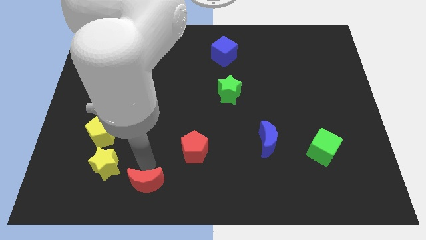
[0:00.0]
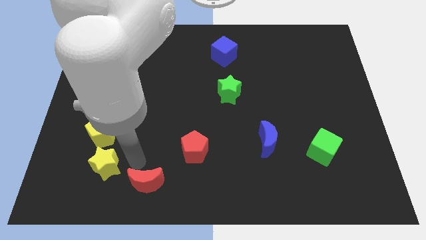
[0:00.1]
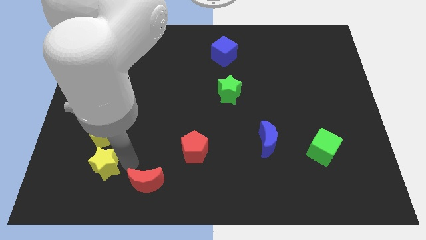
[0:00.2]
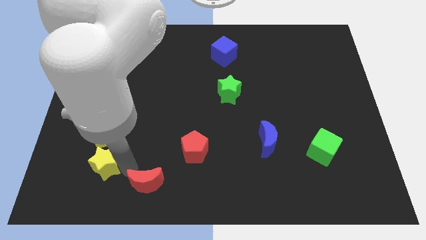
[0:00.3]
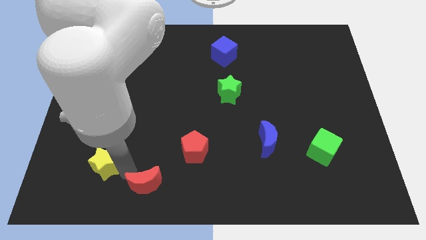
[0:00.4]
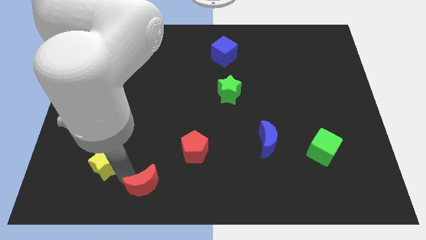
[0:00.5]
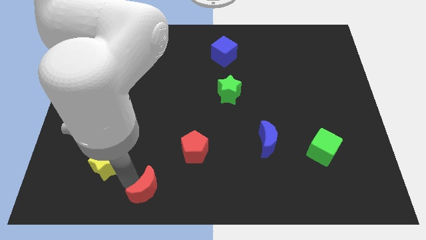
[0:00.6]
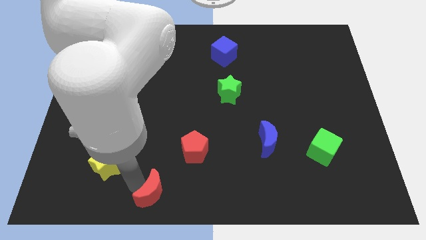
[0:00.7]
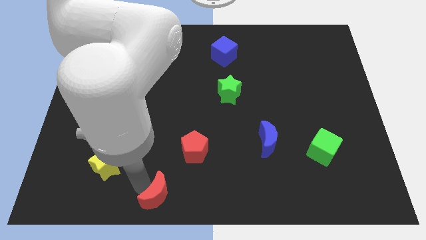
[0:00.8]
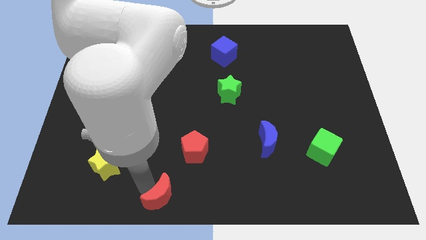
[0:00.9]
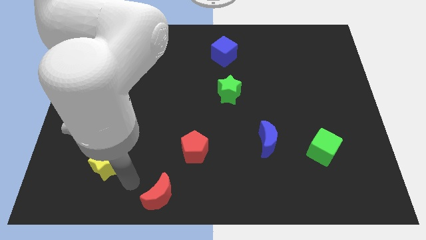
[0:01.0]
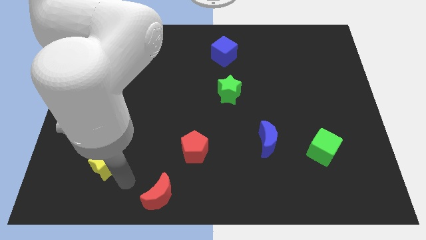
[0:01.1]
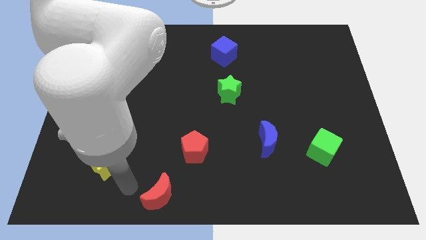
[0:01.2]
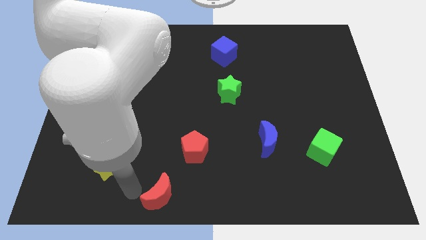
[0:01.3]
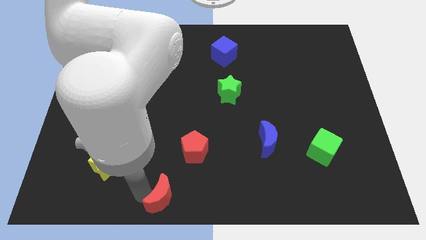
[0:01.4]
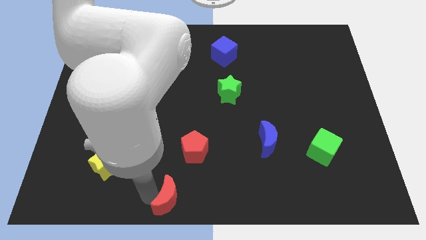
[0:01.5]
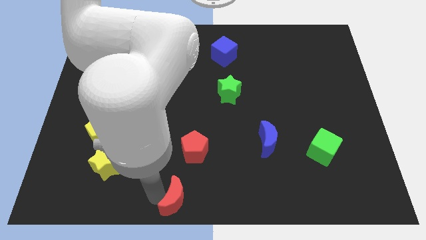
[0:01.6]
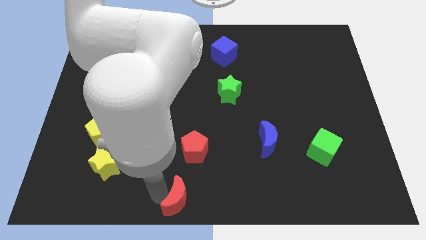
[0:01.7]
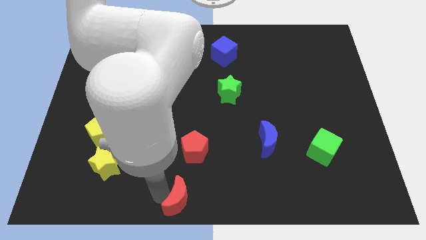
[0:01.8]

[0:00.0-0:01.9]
move the red crescent towards bottom center

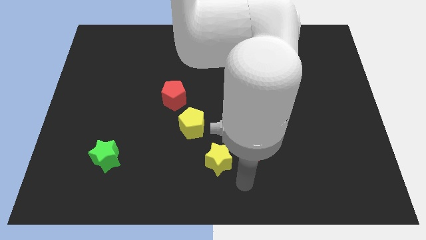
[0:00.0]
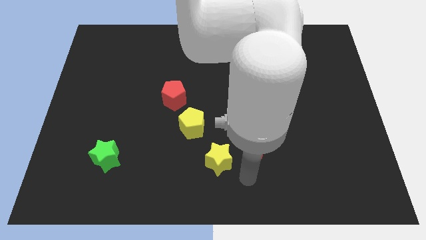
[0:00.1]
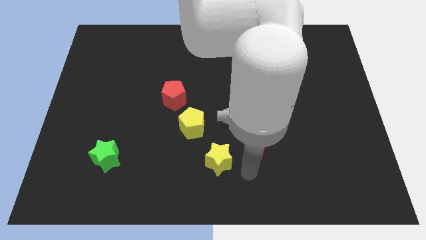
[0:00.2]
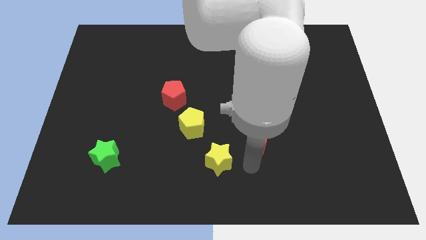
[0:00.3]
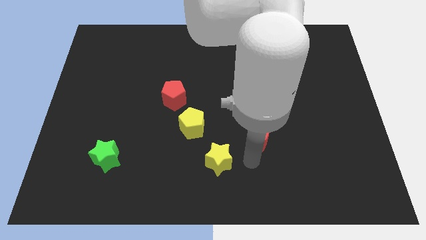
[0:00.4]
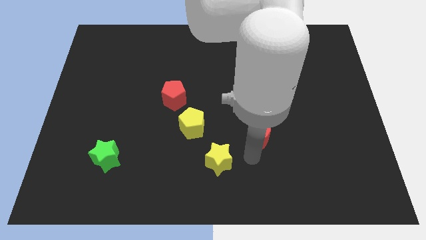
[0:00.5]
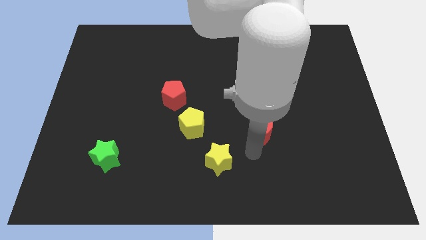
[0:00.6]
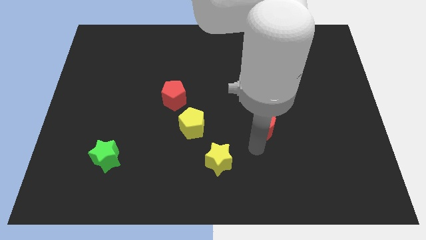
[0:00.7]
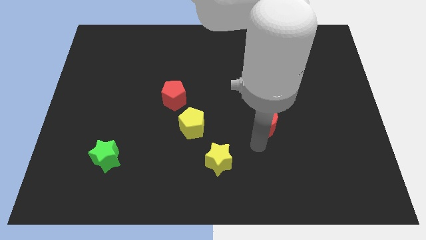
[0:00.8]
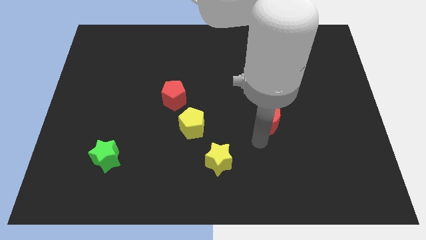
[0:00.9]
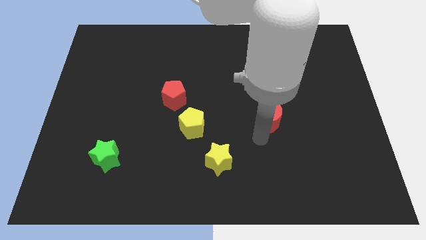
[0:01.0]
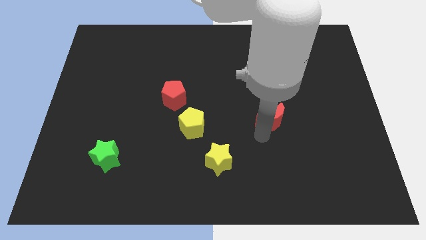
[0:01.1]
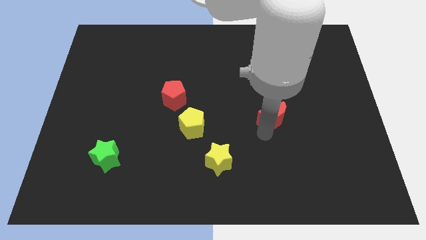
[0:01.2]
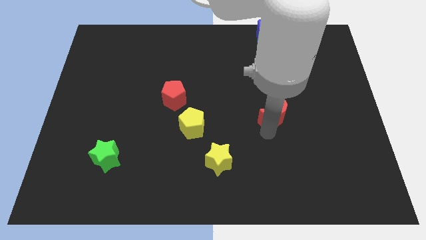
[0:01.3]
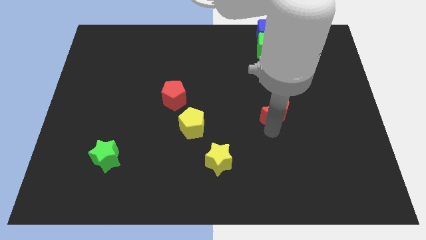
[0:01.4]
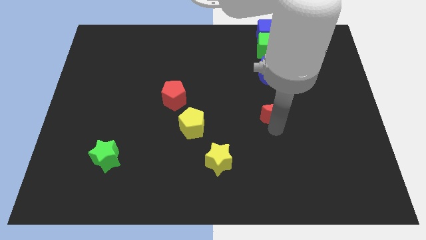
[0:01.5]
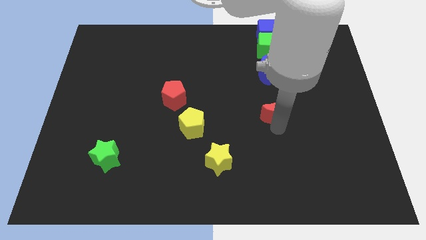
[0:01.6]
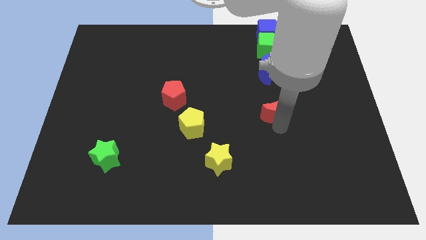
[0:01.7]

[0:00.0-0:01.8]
place the red moon below the blue moon

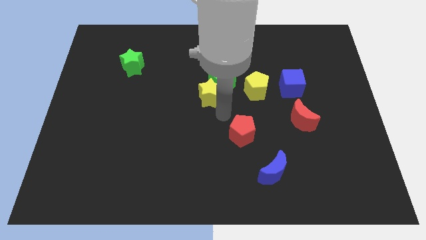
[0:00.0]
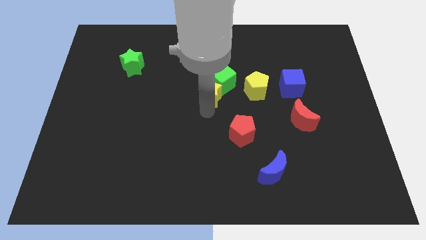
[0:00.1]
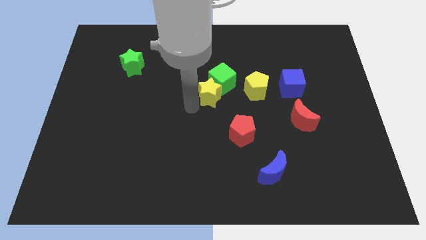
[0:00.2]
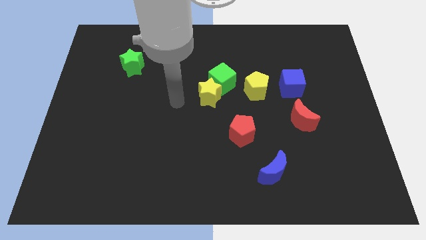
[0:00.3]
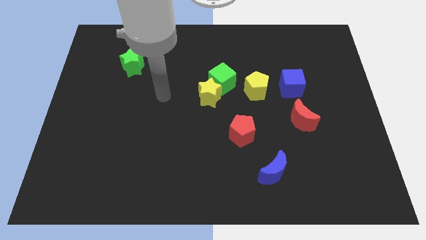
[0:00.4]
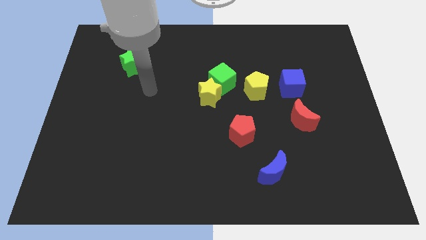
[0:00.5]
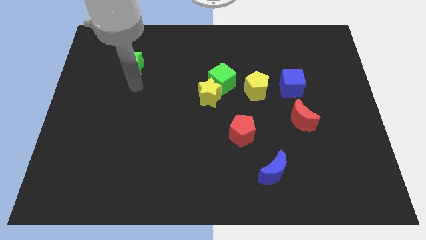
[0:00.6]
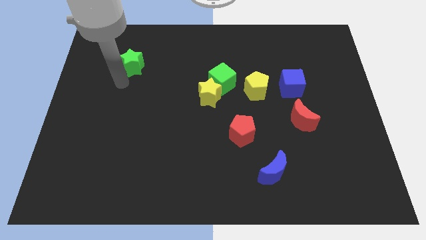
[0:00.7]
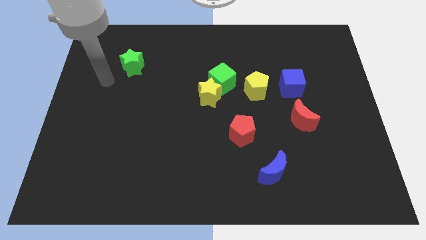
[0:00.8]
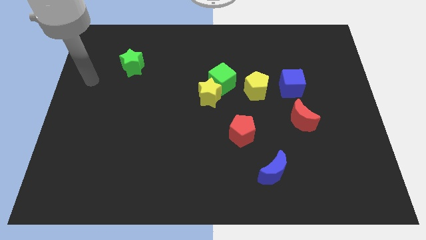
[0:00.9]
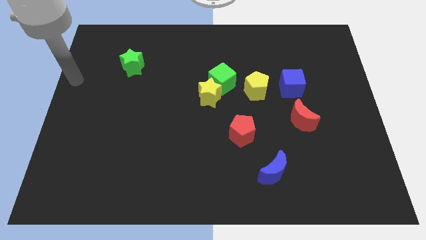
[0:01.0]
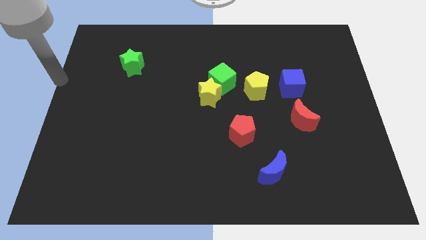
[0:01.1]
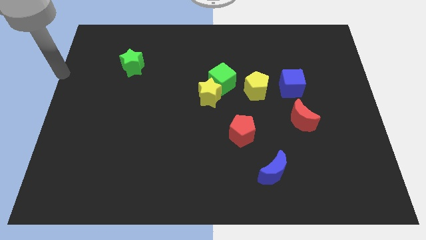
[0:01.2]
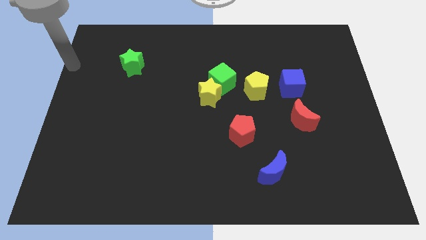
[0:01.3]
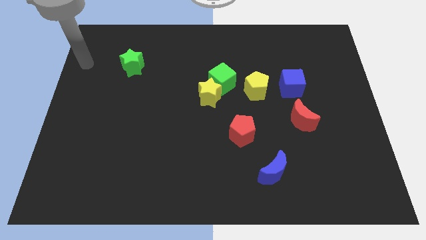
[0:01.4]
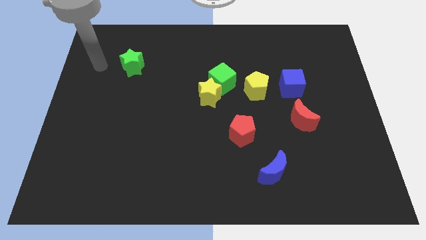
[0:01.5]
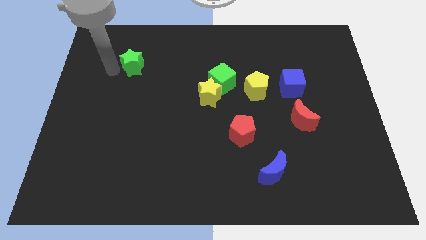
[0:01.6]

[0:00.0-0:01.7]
place the arm left to the green star

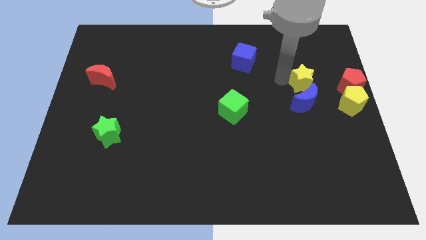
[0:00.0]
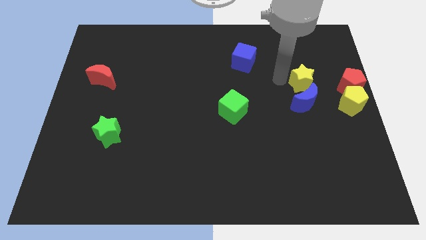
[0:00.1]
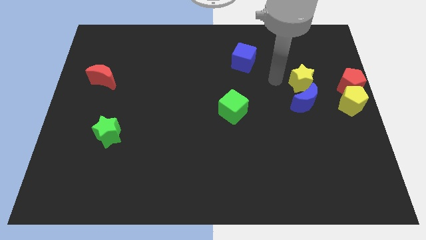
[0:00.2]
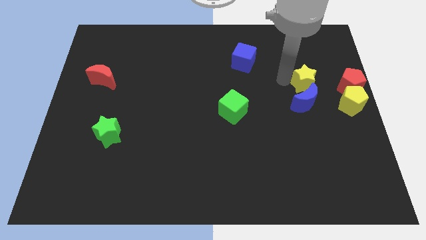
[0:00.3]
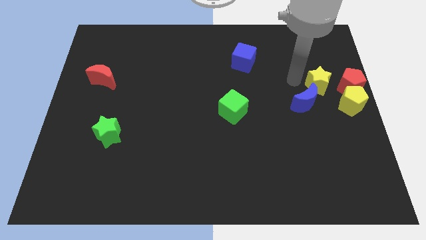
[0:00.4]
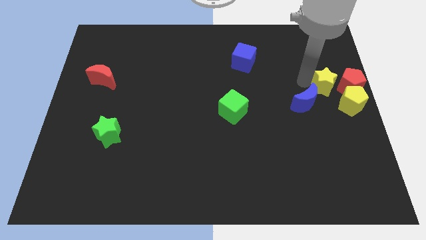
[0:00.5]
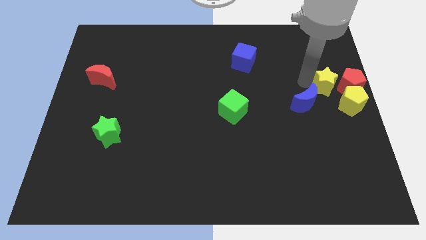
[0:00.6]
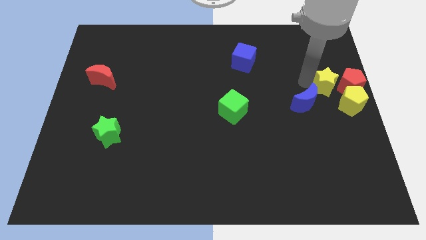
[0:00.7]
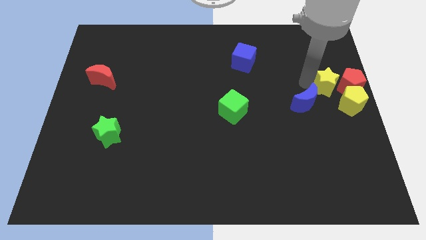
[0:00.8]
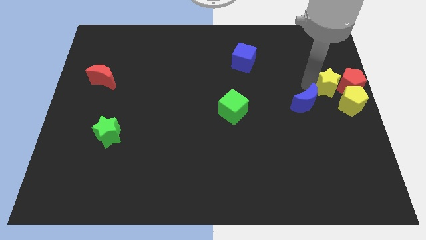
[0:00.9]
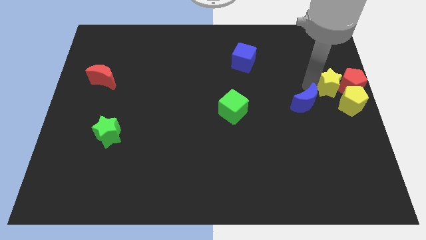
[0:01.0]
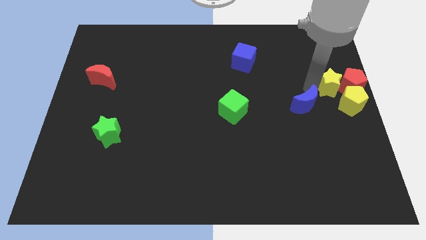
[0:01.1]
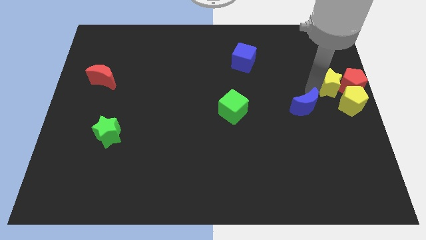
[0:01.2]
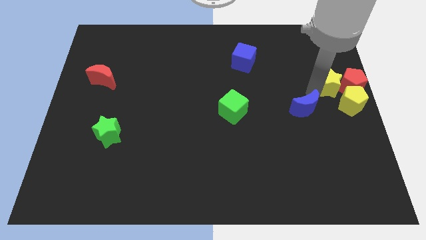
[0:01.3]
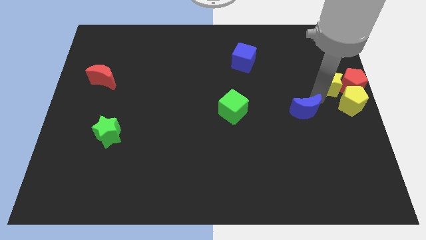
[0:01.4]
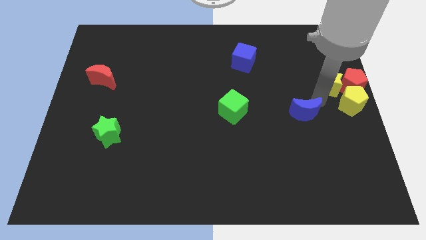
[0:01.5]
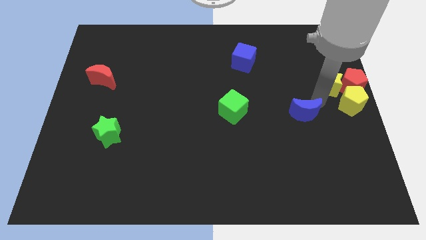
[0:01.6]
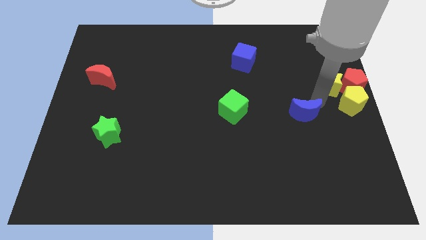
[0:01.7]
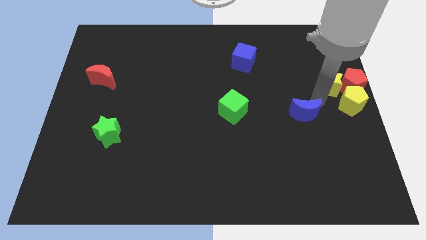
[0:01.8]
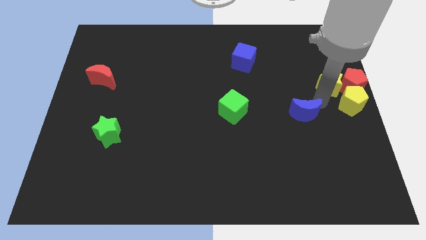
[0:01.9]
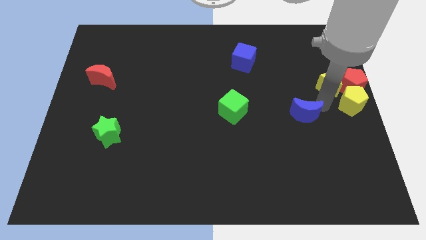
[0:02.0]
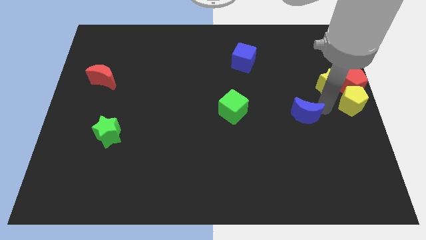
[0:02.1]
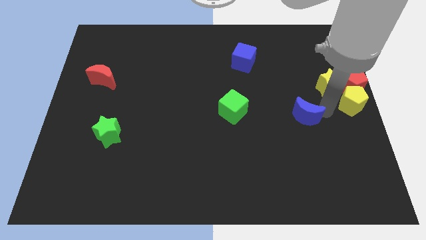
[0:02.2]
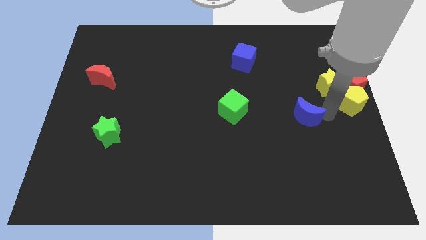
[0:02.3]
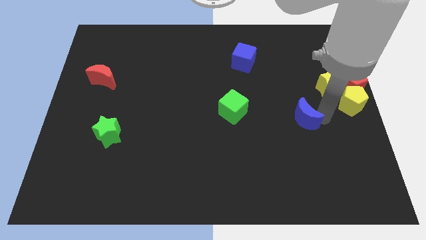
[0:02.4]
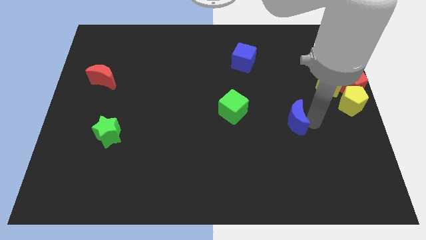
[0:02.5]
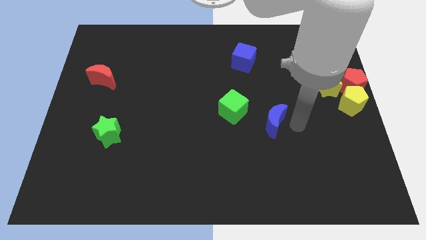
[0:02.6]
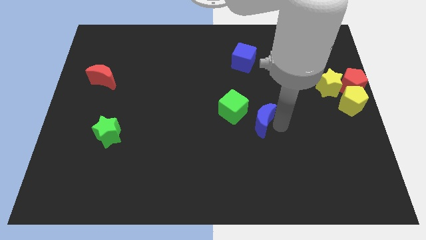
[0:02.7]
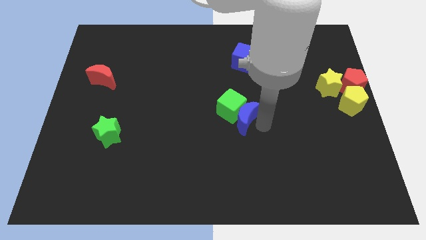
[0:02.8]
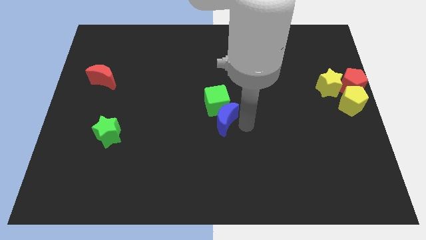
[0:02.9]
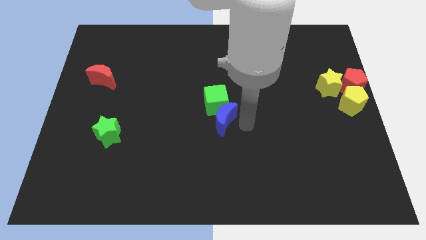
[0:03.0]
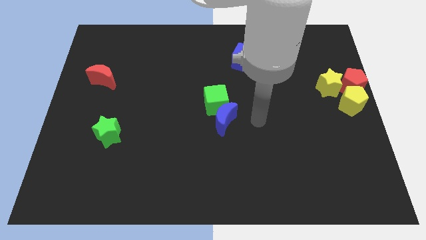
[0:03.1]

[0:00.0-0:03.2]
push blue crescent below green cube

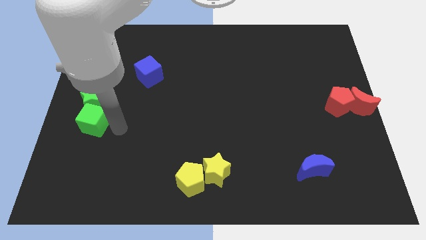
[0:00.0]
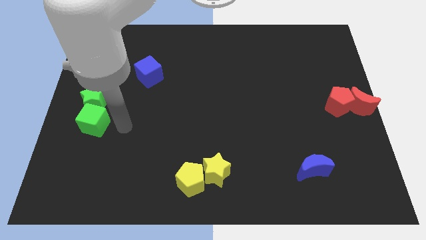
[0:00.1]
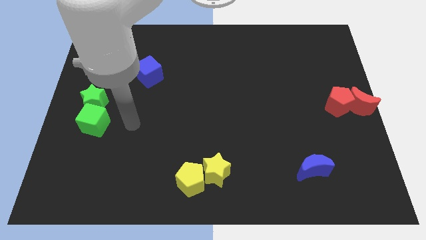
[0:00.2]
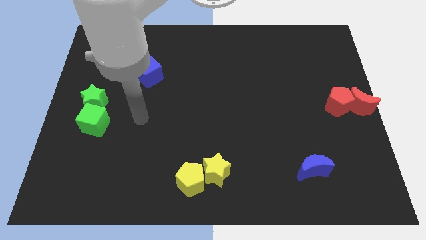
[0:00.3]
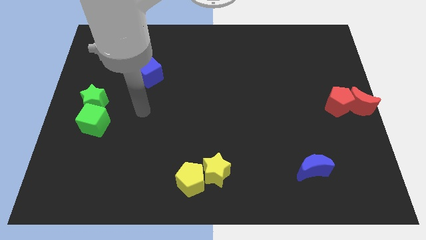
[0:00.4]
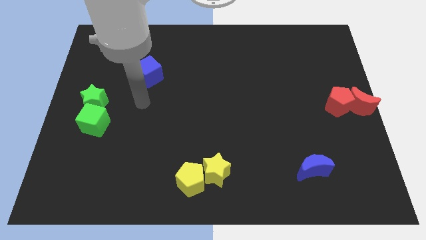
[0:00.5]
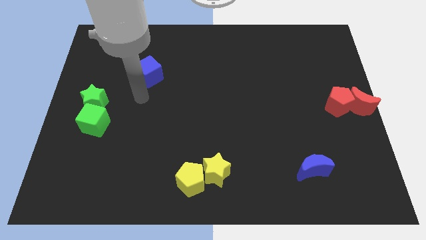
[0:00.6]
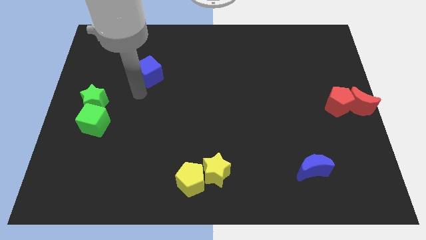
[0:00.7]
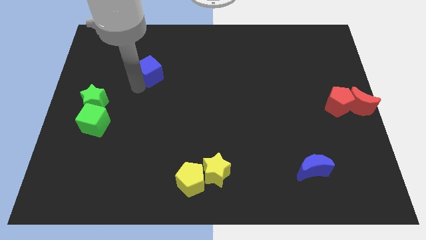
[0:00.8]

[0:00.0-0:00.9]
move the arm into the blue cube
